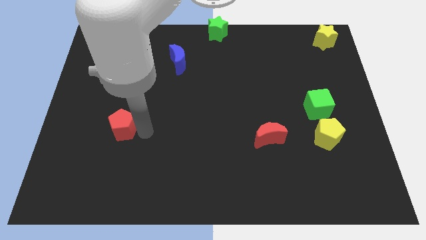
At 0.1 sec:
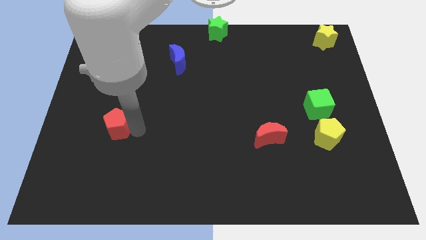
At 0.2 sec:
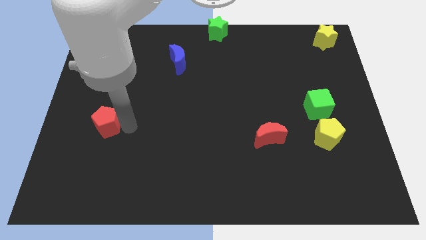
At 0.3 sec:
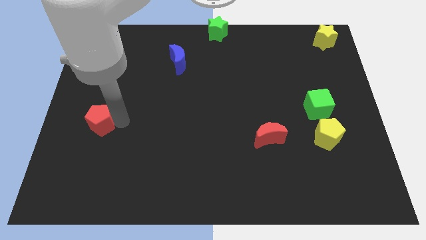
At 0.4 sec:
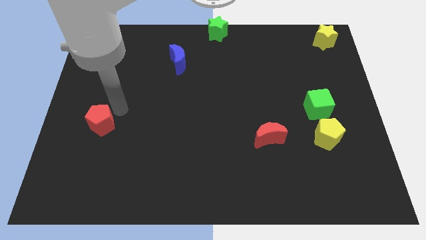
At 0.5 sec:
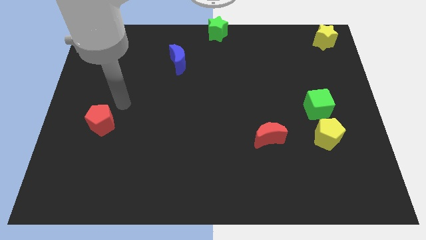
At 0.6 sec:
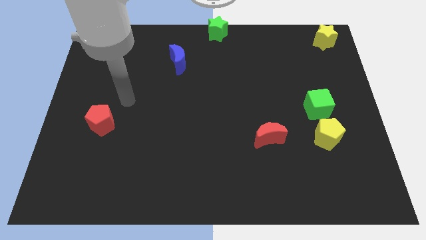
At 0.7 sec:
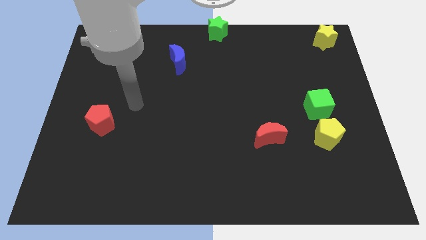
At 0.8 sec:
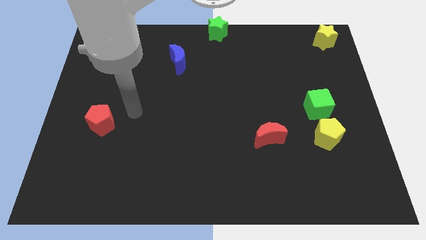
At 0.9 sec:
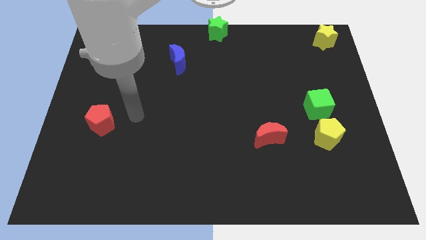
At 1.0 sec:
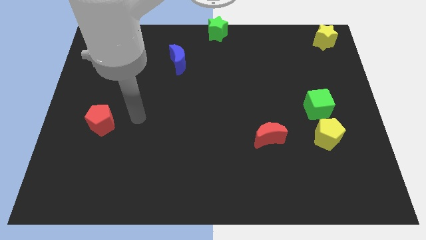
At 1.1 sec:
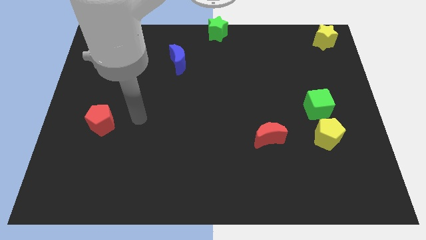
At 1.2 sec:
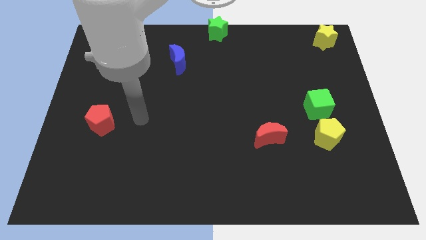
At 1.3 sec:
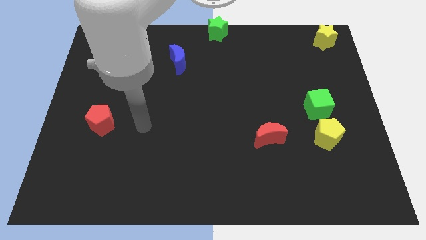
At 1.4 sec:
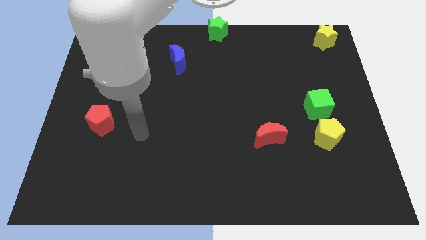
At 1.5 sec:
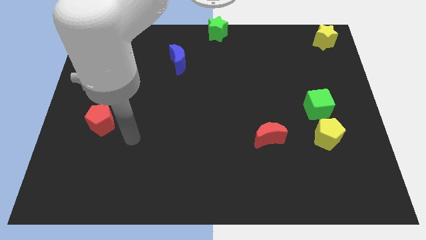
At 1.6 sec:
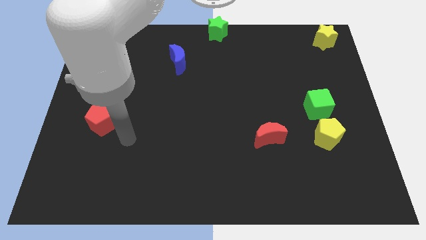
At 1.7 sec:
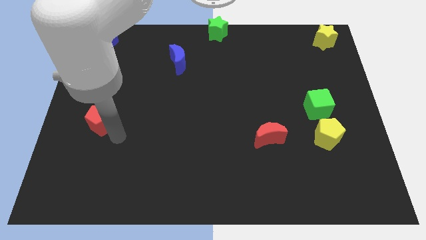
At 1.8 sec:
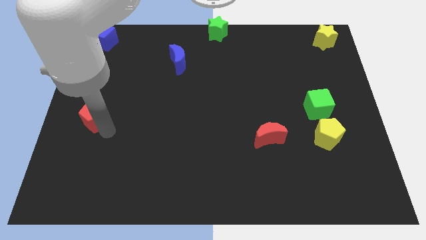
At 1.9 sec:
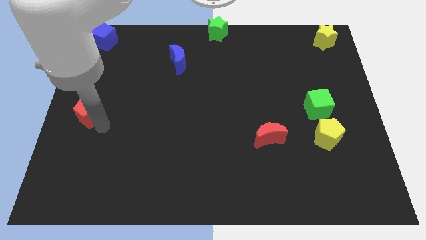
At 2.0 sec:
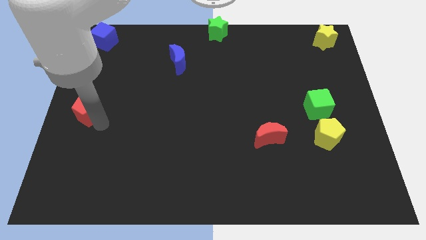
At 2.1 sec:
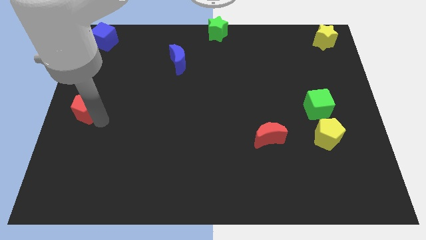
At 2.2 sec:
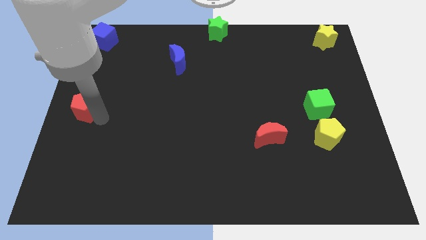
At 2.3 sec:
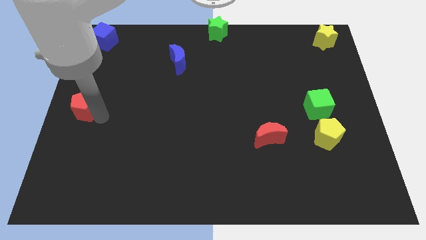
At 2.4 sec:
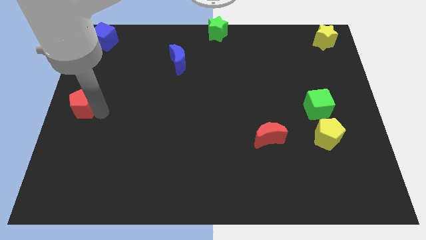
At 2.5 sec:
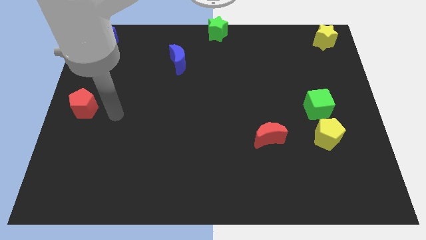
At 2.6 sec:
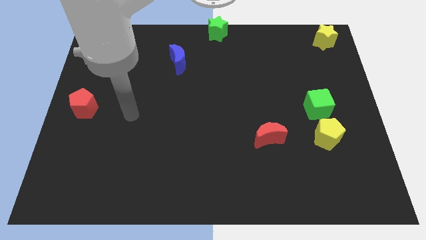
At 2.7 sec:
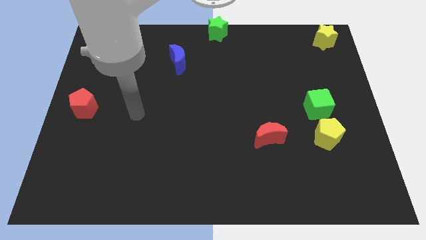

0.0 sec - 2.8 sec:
push the red pentagon towards the center left

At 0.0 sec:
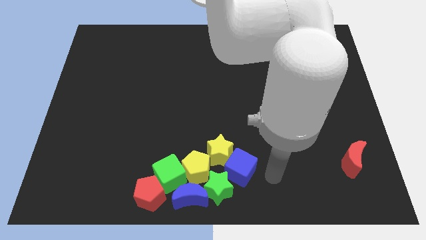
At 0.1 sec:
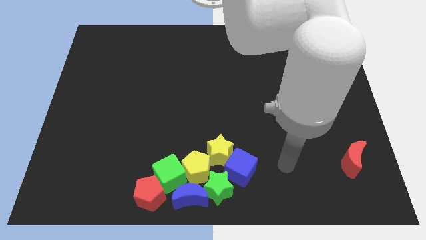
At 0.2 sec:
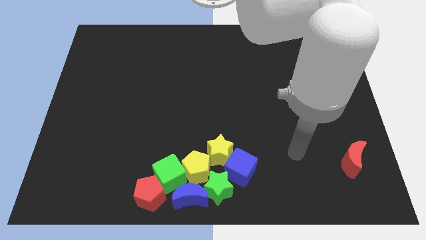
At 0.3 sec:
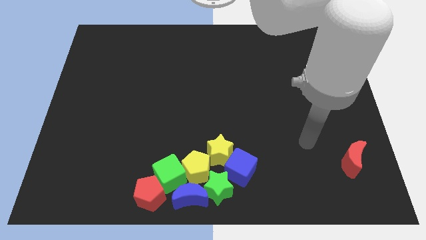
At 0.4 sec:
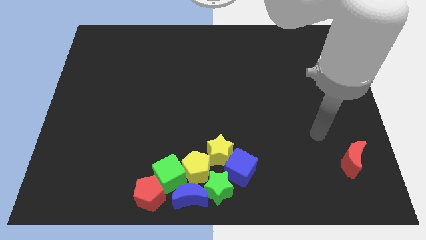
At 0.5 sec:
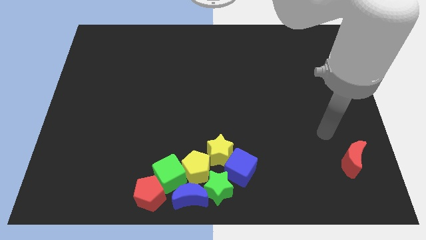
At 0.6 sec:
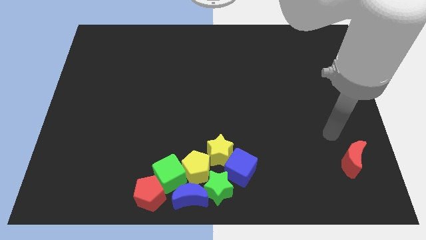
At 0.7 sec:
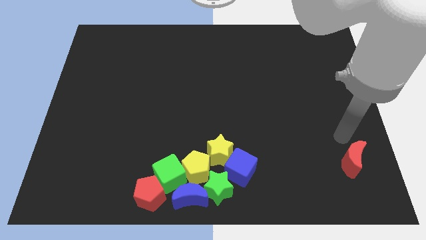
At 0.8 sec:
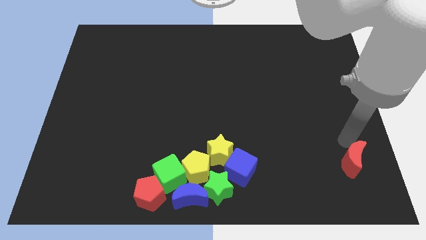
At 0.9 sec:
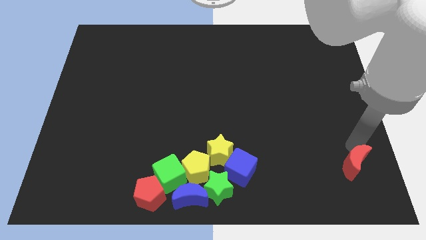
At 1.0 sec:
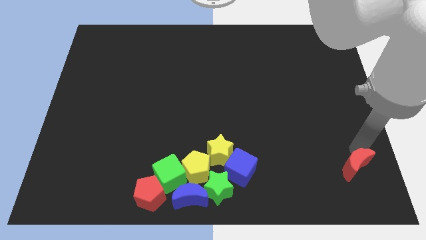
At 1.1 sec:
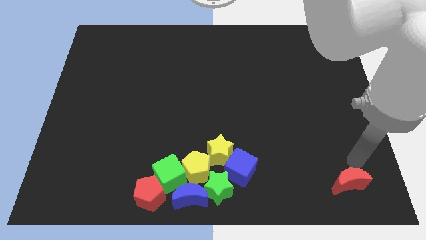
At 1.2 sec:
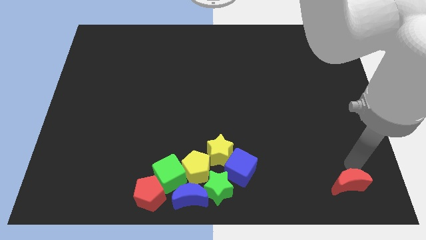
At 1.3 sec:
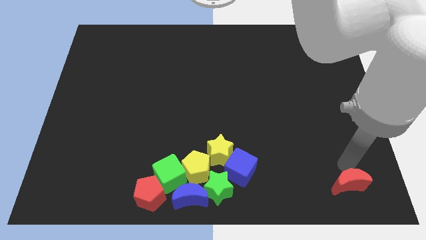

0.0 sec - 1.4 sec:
move the red crescent slightly down

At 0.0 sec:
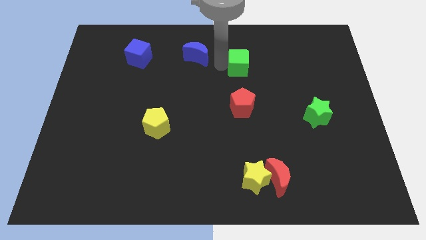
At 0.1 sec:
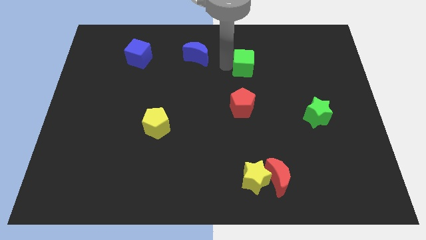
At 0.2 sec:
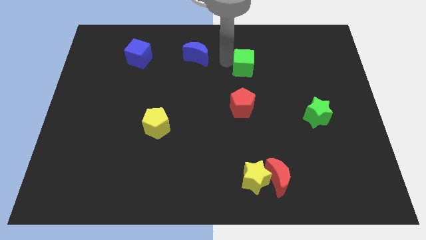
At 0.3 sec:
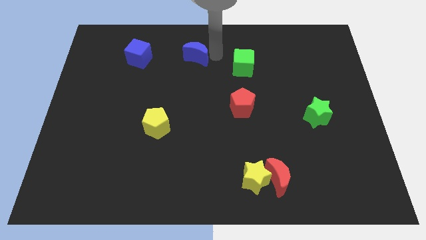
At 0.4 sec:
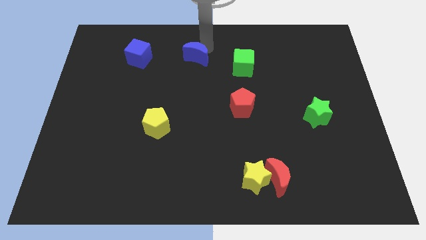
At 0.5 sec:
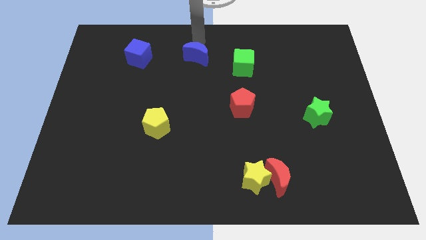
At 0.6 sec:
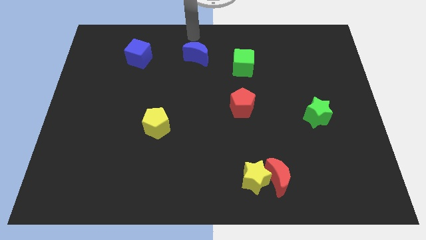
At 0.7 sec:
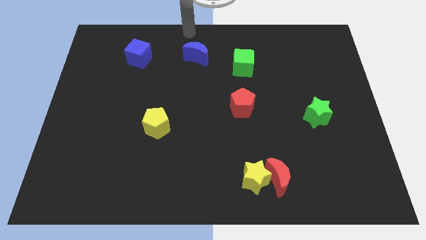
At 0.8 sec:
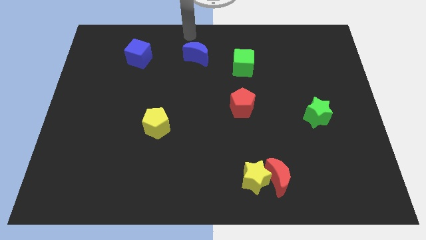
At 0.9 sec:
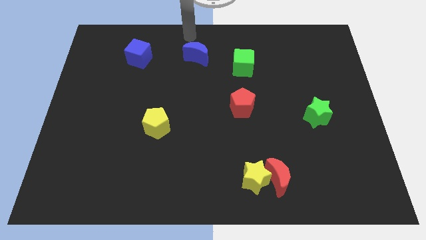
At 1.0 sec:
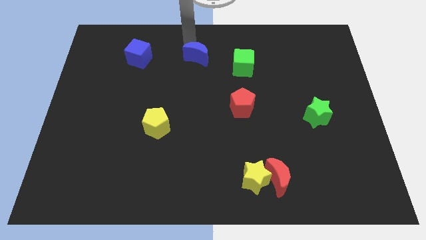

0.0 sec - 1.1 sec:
place arm above blue crescent

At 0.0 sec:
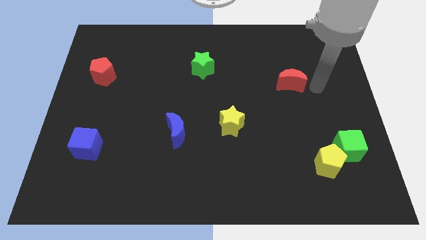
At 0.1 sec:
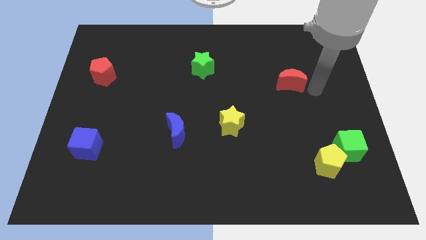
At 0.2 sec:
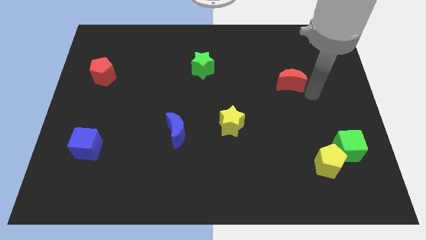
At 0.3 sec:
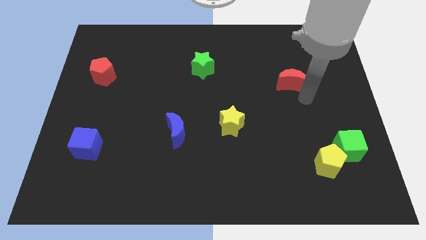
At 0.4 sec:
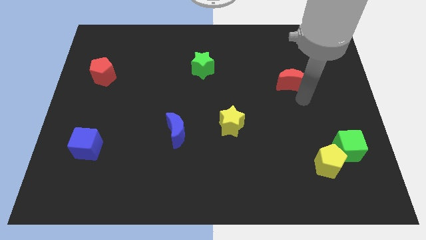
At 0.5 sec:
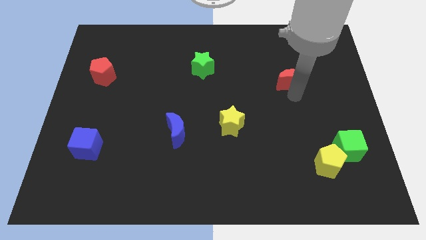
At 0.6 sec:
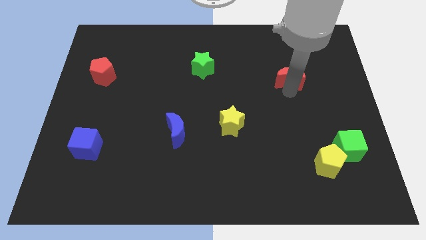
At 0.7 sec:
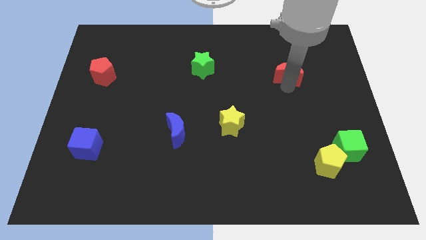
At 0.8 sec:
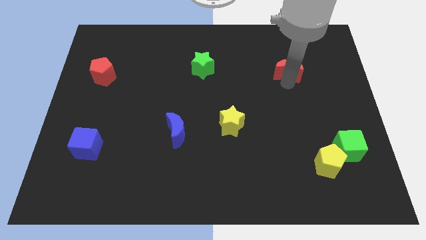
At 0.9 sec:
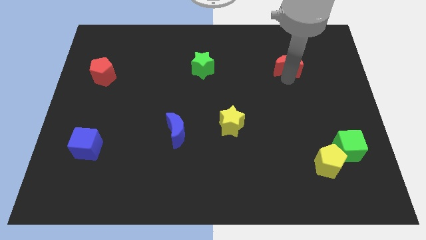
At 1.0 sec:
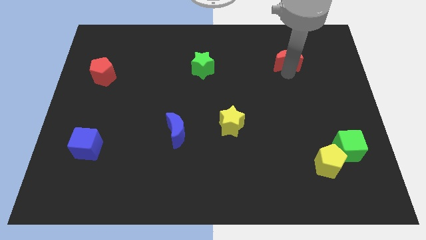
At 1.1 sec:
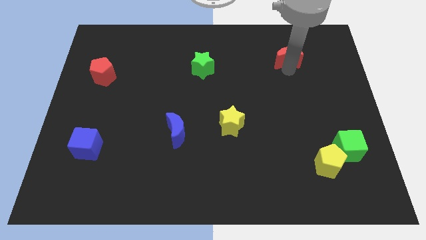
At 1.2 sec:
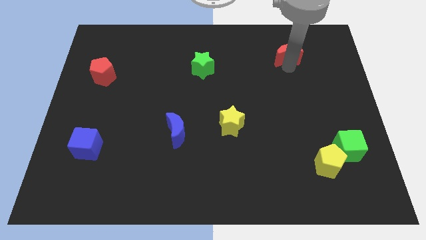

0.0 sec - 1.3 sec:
move the red crescent to the top of the board

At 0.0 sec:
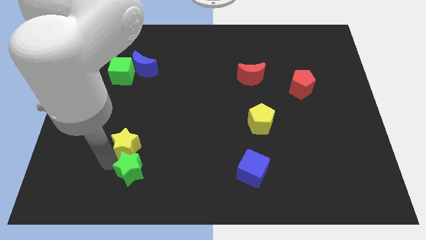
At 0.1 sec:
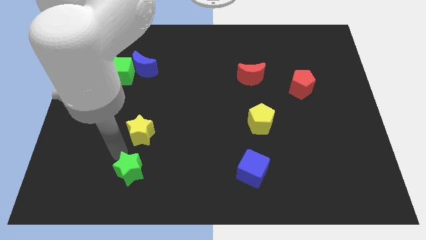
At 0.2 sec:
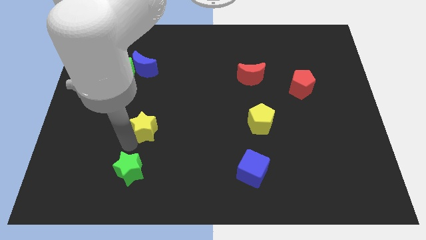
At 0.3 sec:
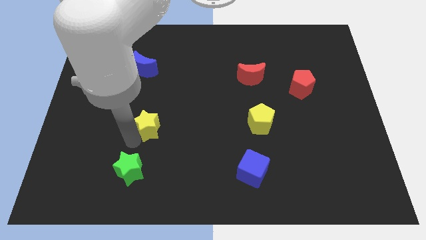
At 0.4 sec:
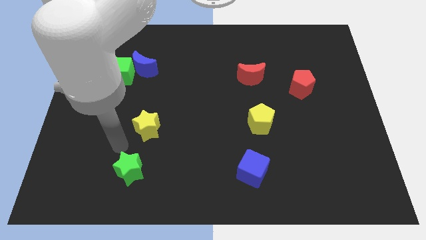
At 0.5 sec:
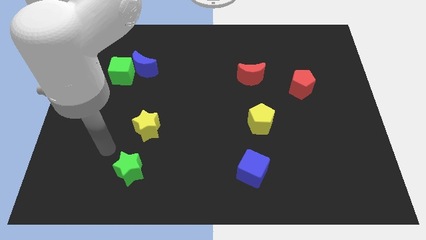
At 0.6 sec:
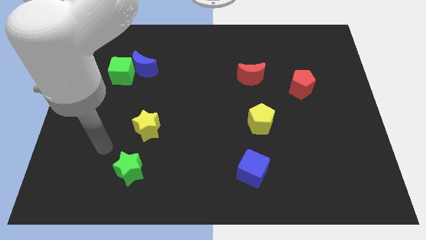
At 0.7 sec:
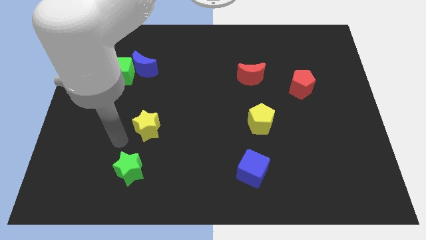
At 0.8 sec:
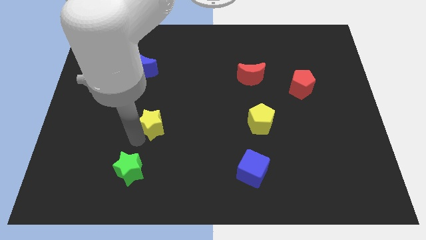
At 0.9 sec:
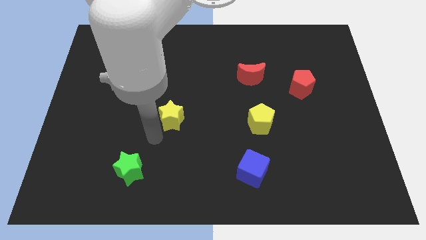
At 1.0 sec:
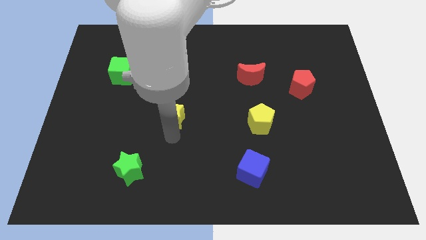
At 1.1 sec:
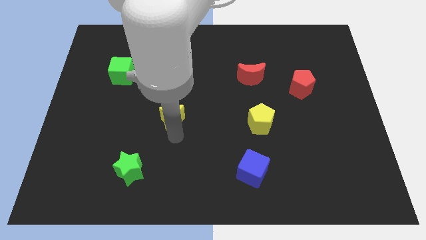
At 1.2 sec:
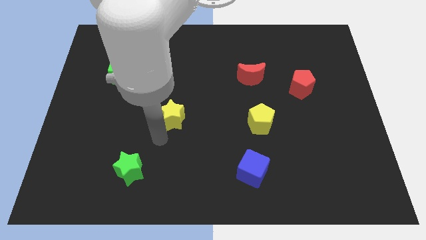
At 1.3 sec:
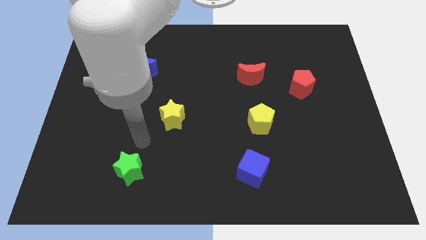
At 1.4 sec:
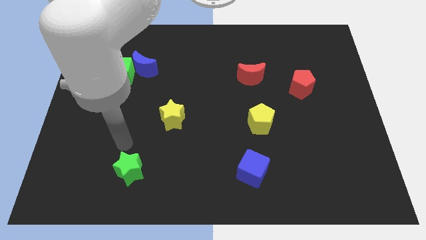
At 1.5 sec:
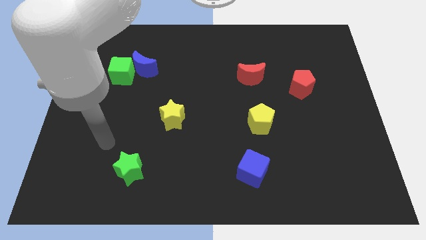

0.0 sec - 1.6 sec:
put the yellow star horizontally left to the yellow pentagon

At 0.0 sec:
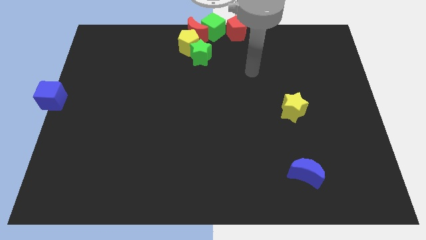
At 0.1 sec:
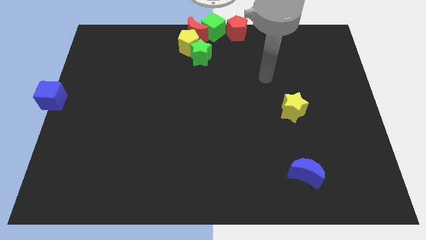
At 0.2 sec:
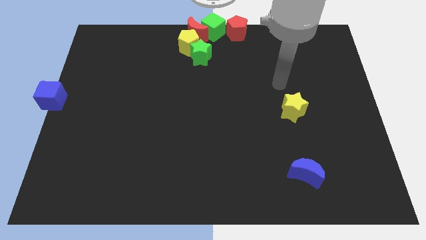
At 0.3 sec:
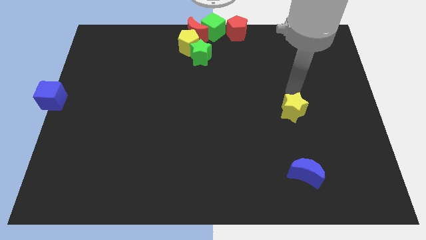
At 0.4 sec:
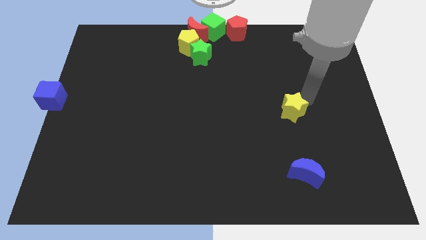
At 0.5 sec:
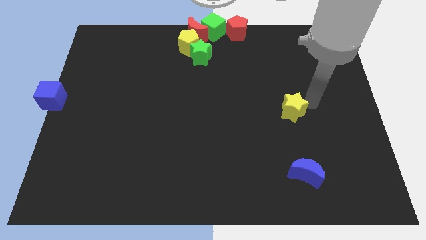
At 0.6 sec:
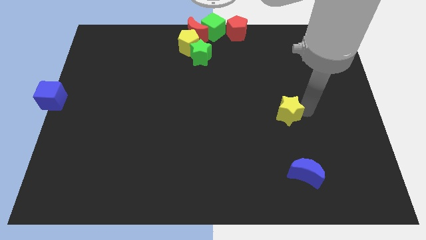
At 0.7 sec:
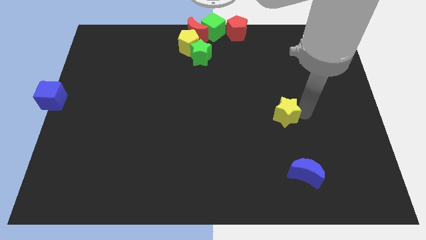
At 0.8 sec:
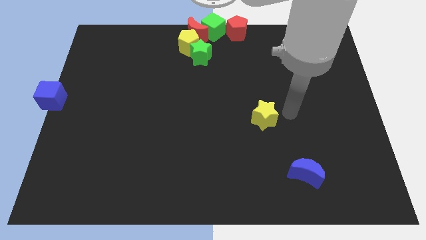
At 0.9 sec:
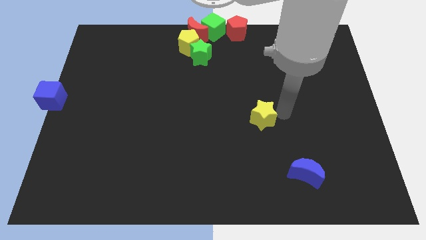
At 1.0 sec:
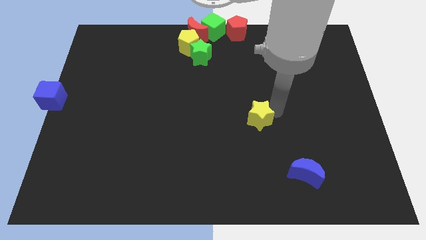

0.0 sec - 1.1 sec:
slightly move the yellow star
